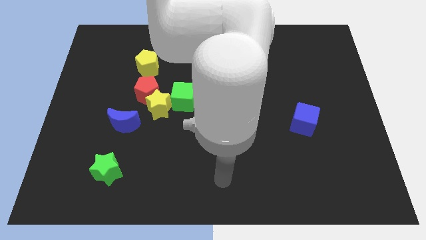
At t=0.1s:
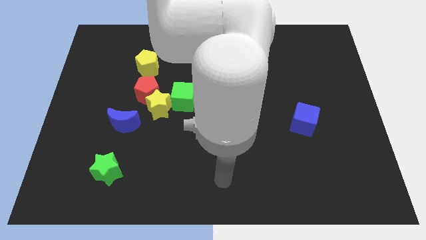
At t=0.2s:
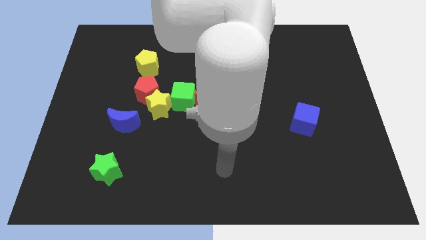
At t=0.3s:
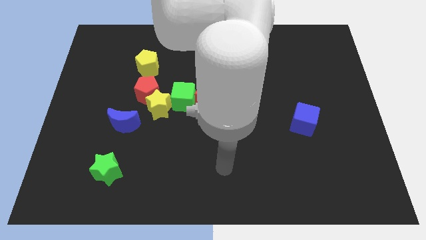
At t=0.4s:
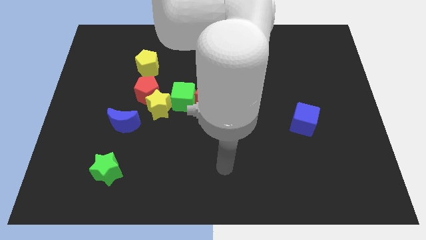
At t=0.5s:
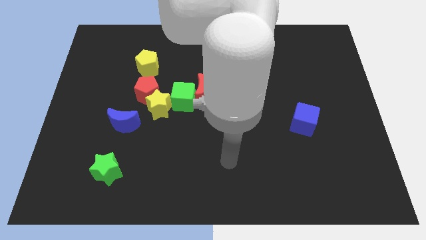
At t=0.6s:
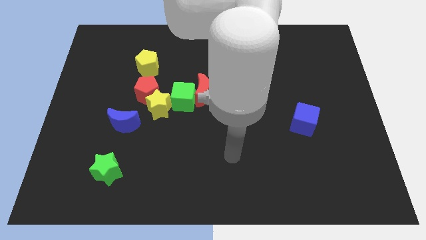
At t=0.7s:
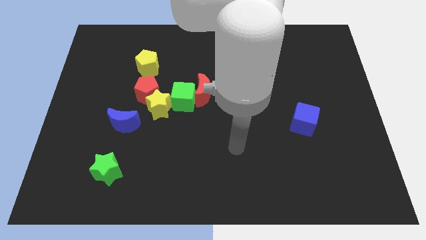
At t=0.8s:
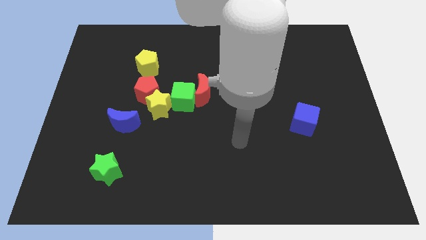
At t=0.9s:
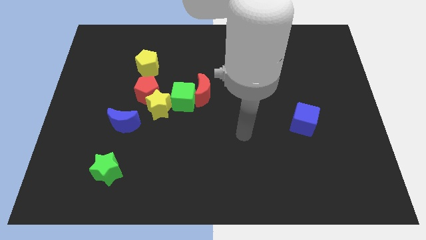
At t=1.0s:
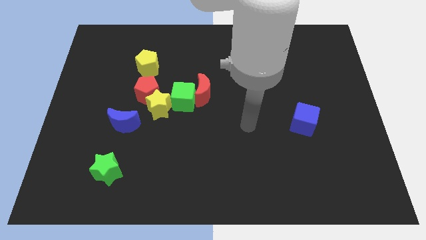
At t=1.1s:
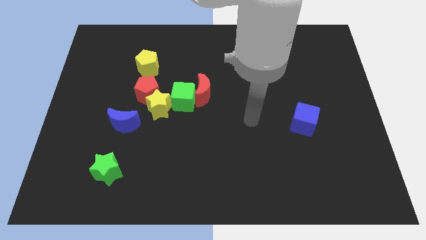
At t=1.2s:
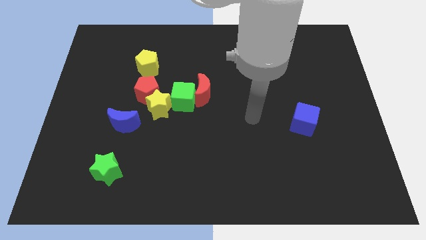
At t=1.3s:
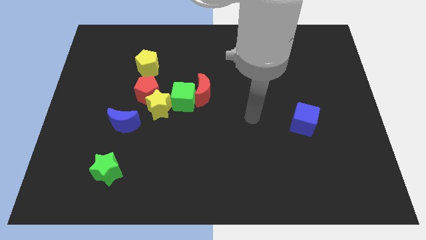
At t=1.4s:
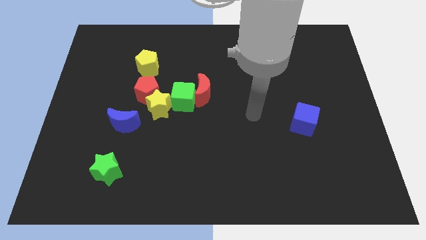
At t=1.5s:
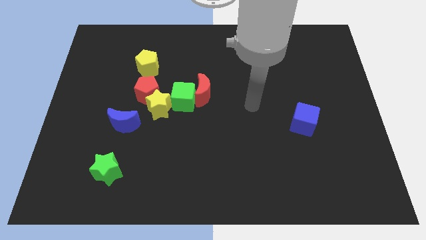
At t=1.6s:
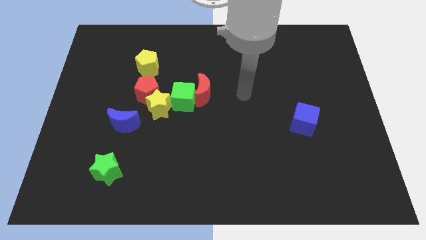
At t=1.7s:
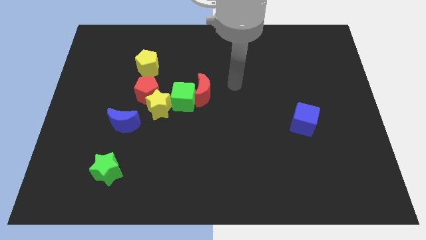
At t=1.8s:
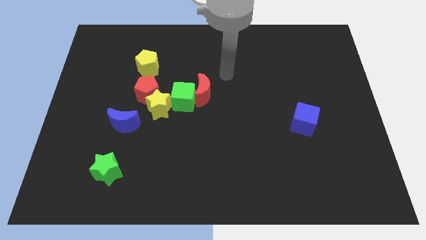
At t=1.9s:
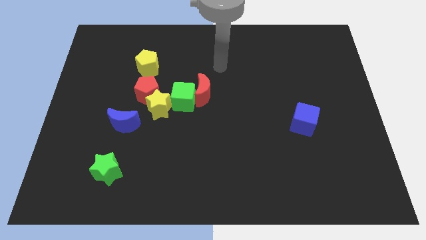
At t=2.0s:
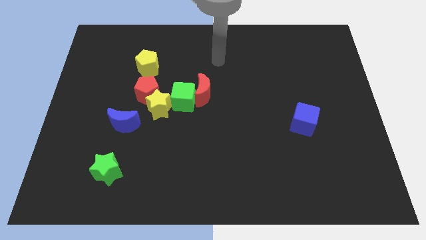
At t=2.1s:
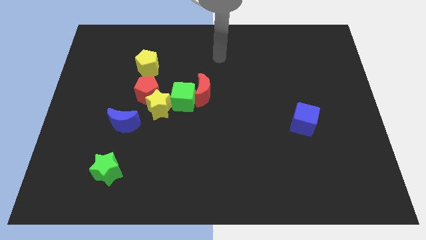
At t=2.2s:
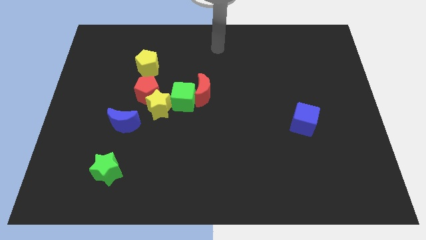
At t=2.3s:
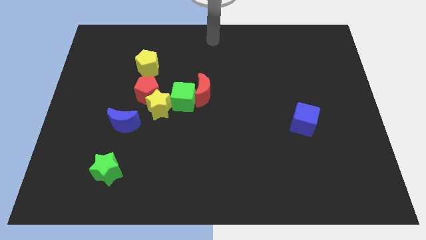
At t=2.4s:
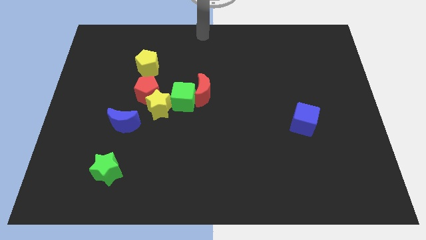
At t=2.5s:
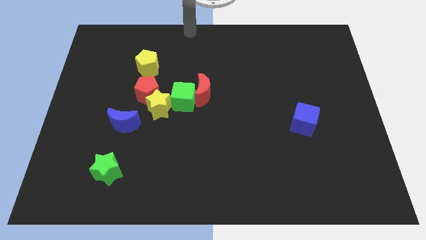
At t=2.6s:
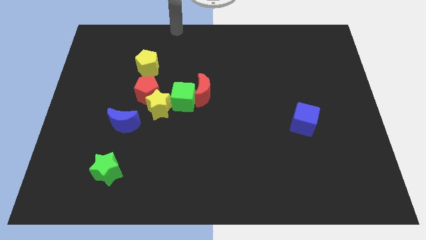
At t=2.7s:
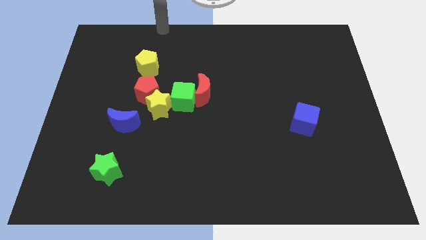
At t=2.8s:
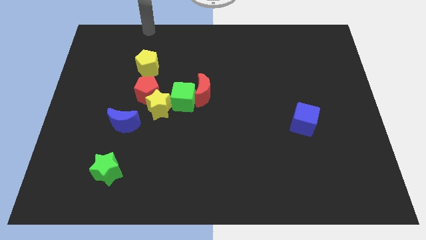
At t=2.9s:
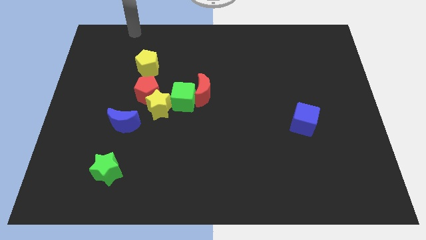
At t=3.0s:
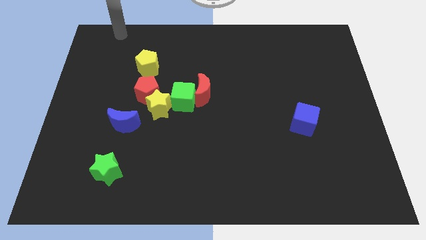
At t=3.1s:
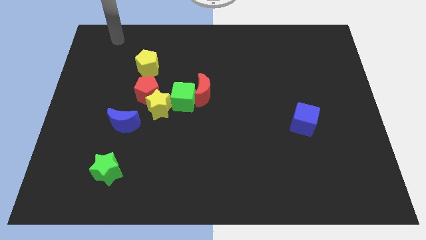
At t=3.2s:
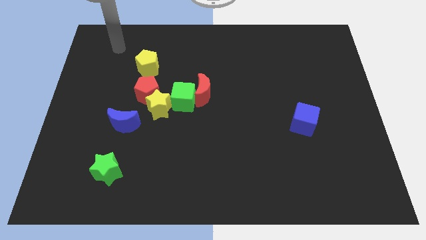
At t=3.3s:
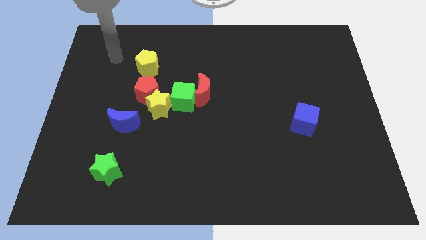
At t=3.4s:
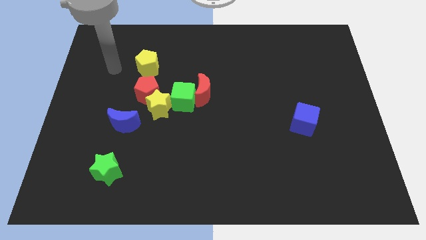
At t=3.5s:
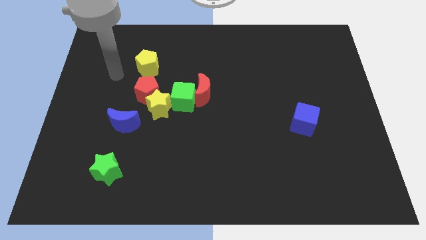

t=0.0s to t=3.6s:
place your hand to the left side of the yellow pentagon

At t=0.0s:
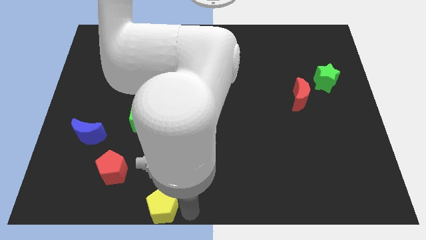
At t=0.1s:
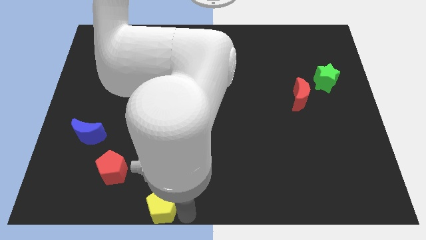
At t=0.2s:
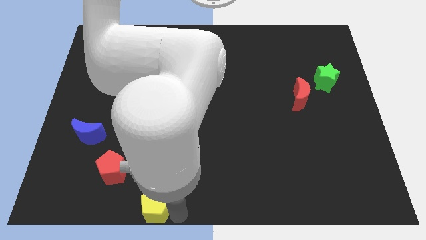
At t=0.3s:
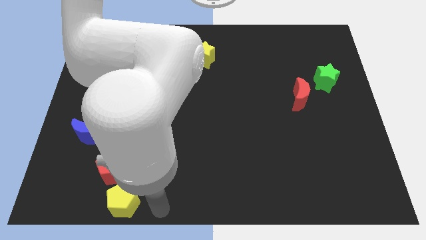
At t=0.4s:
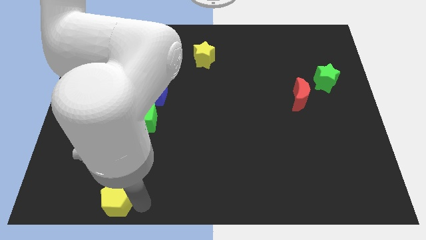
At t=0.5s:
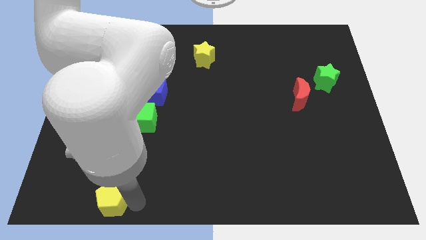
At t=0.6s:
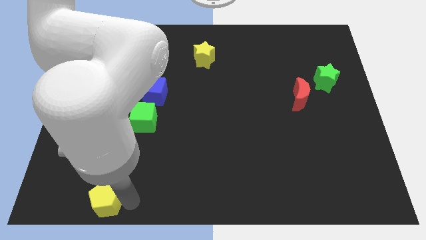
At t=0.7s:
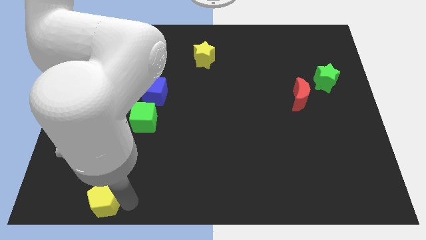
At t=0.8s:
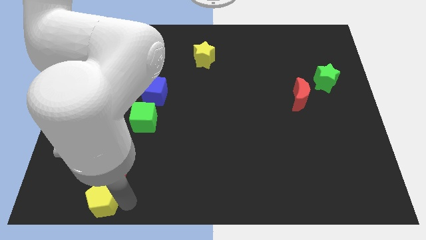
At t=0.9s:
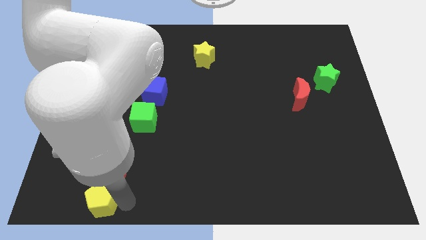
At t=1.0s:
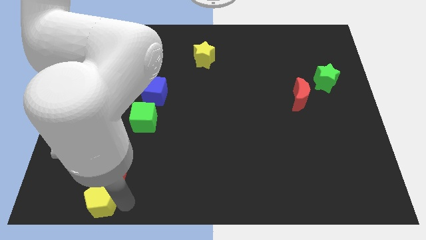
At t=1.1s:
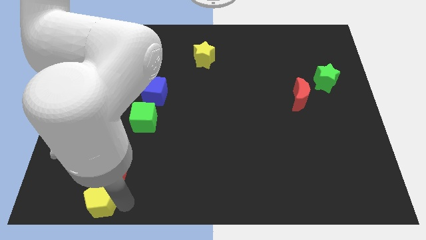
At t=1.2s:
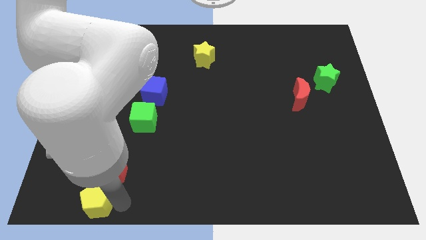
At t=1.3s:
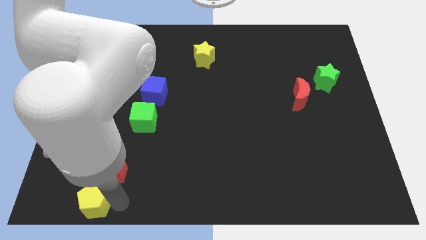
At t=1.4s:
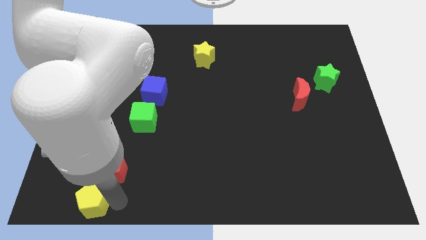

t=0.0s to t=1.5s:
place the yellow pentagon below the red pentagon

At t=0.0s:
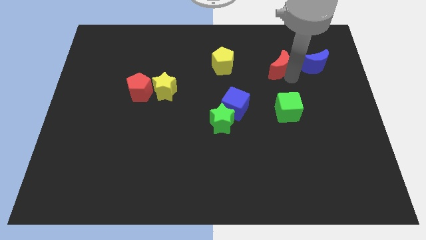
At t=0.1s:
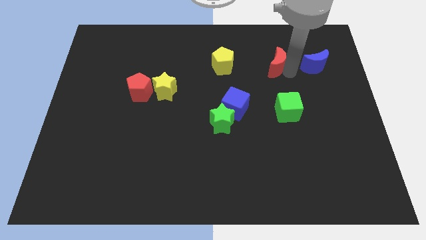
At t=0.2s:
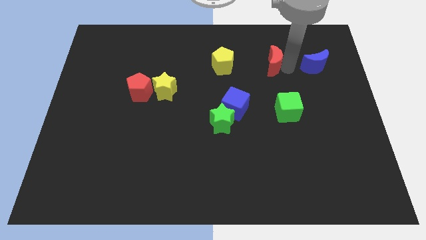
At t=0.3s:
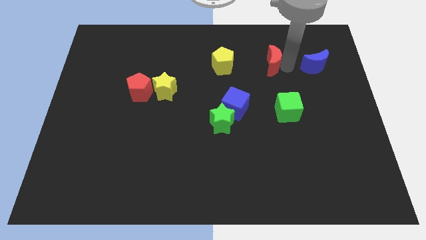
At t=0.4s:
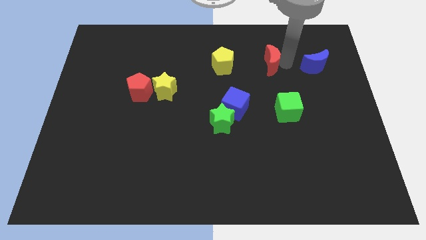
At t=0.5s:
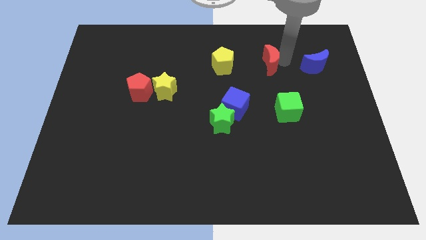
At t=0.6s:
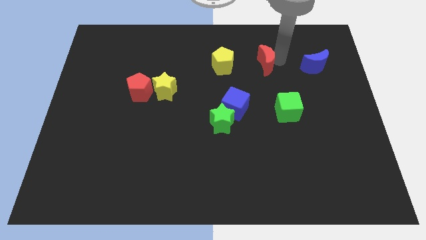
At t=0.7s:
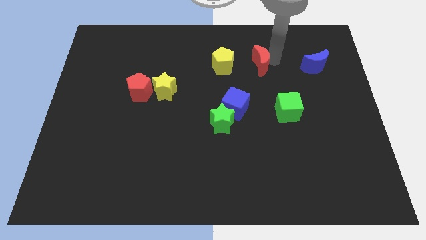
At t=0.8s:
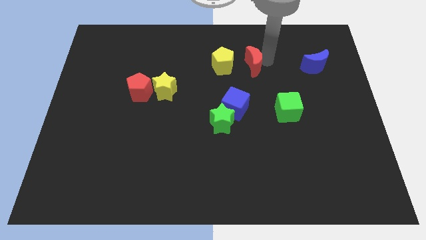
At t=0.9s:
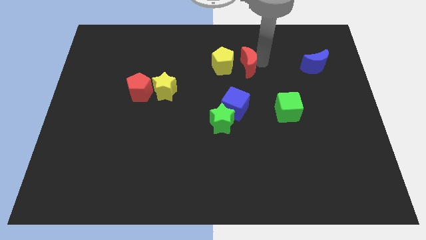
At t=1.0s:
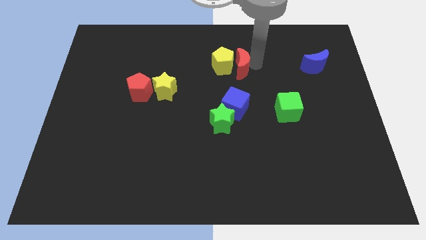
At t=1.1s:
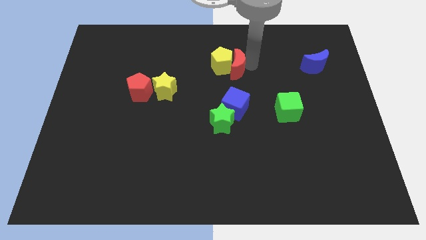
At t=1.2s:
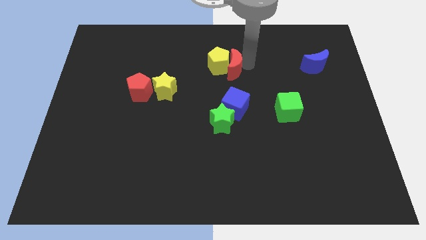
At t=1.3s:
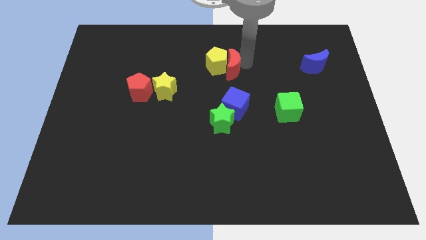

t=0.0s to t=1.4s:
push the red crescent to the right side of the yellow pentagon

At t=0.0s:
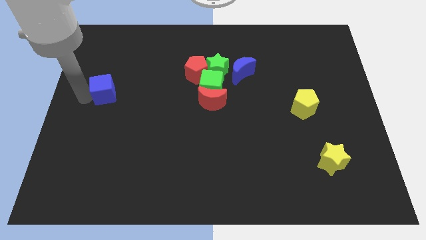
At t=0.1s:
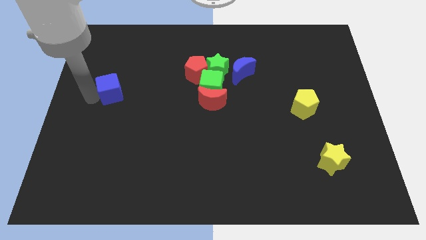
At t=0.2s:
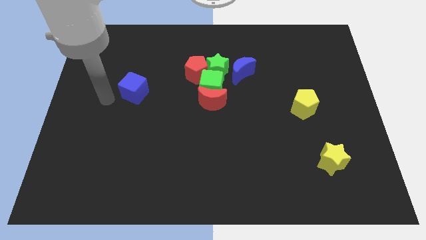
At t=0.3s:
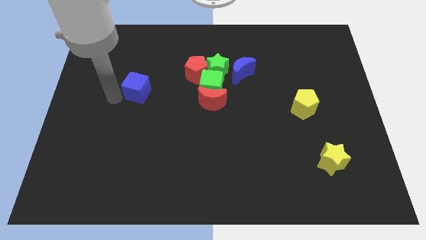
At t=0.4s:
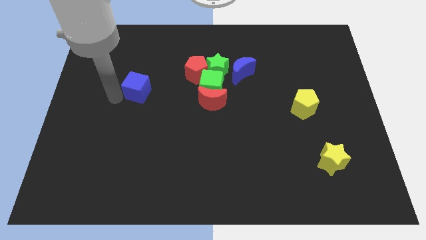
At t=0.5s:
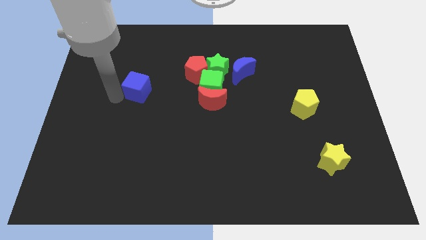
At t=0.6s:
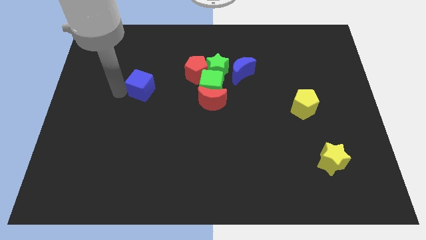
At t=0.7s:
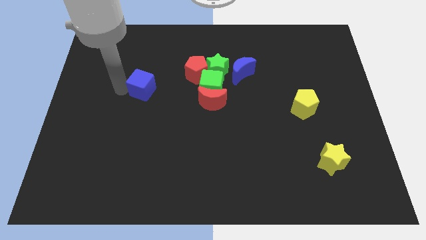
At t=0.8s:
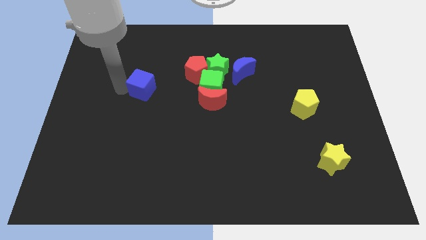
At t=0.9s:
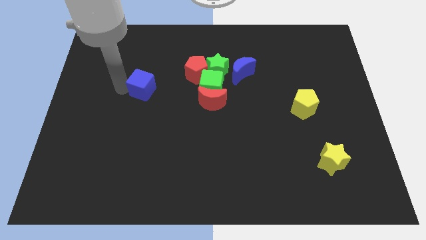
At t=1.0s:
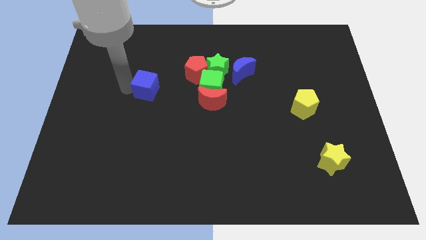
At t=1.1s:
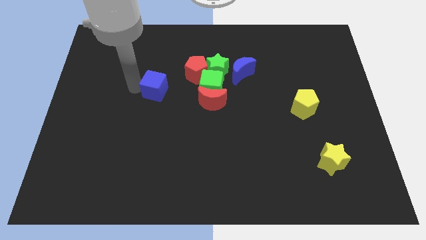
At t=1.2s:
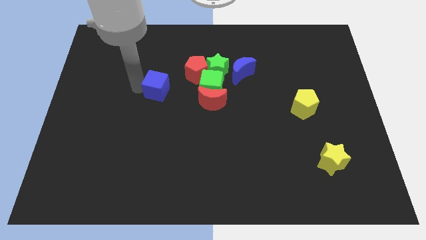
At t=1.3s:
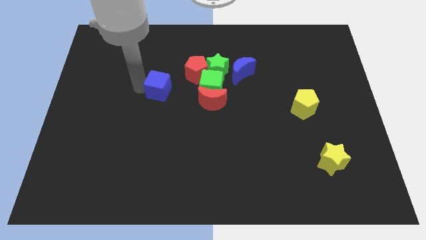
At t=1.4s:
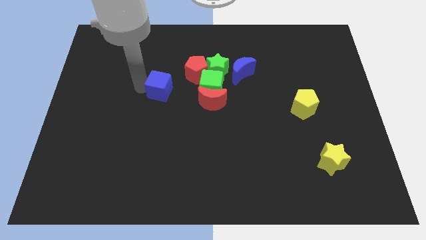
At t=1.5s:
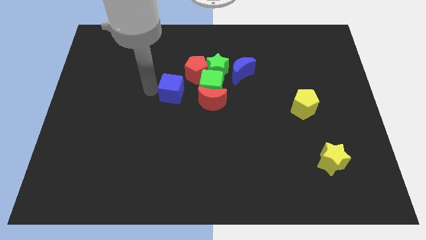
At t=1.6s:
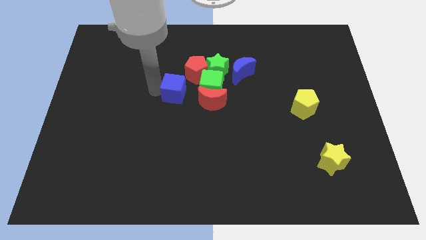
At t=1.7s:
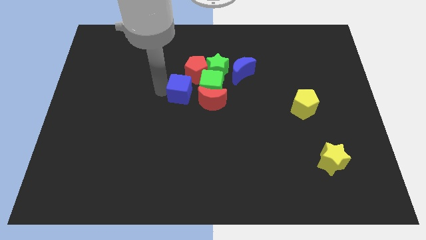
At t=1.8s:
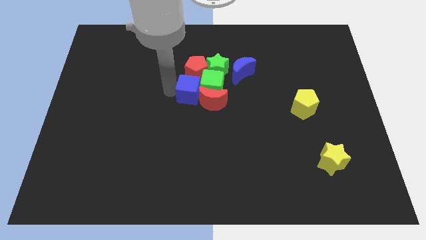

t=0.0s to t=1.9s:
push the blue cube towards the red crescent

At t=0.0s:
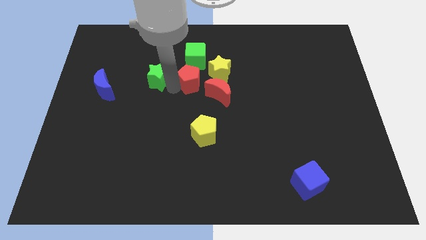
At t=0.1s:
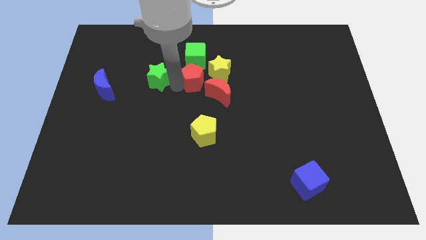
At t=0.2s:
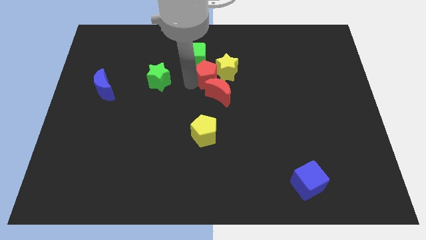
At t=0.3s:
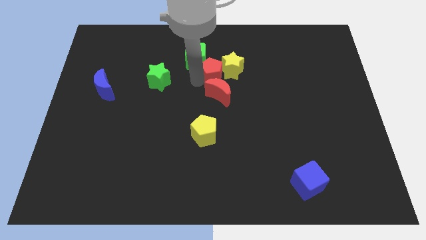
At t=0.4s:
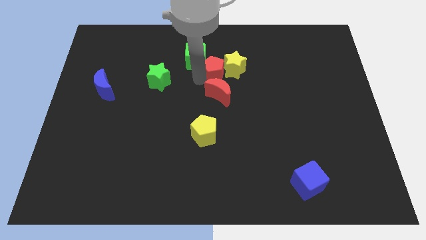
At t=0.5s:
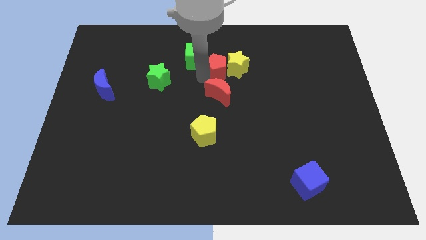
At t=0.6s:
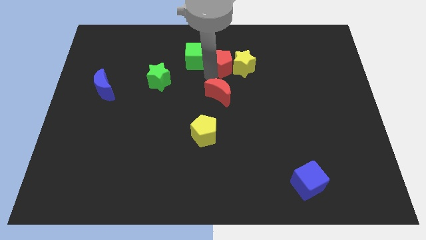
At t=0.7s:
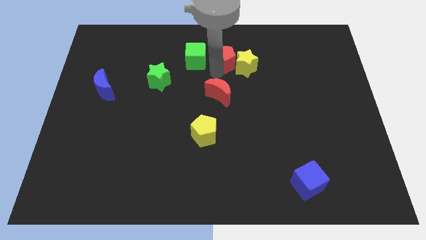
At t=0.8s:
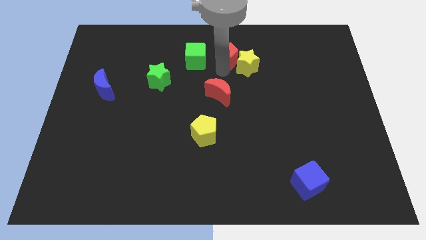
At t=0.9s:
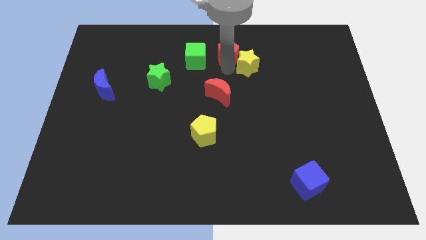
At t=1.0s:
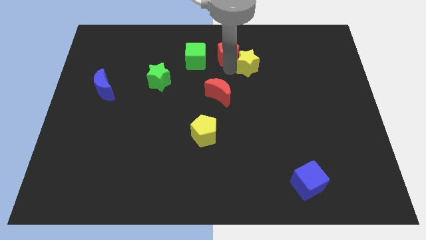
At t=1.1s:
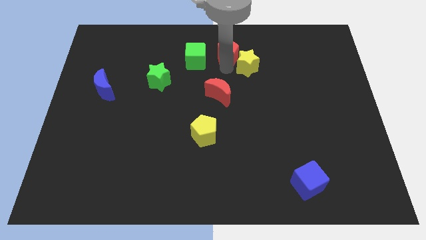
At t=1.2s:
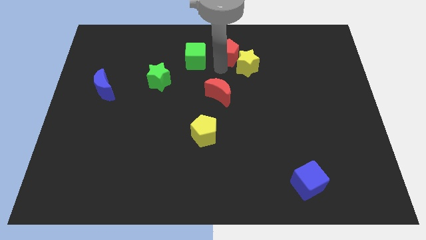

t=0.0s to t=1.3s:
place the red pentagon in between the green cube and yellow star
